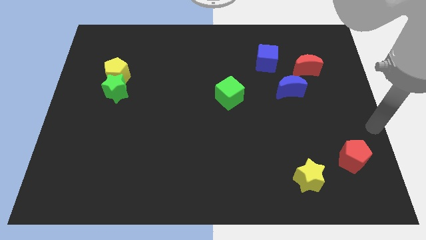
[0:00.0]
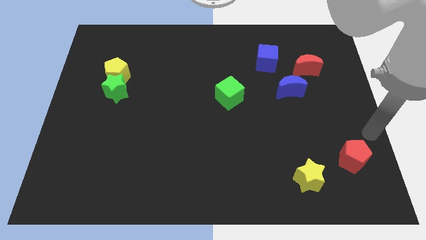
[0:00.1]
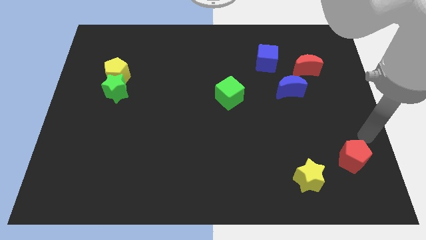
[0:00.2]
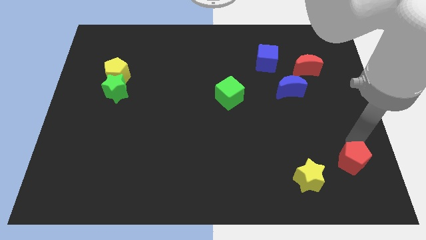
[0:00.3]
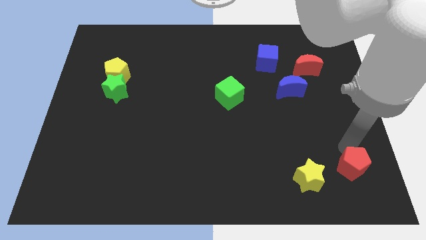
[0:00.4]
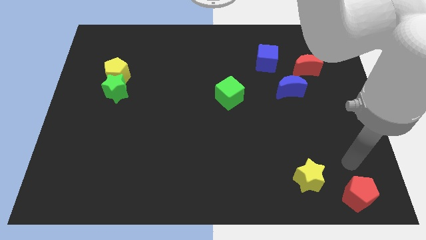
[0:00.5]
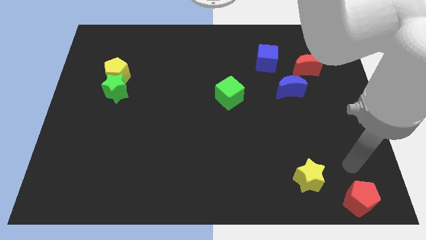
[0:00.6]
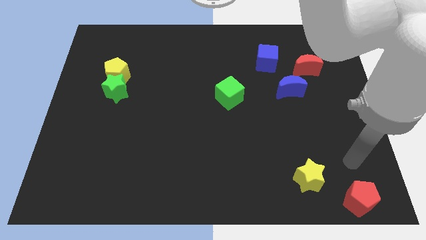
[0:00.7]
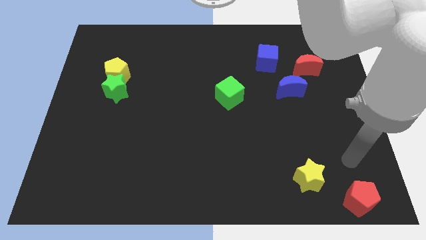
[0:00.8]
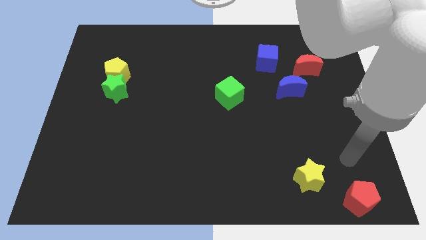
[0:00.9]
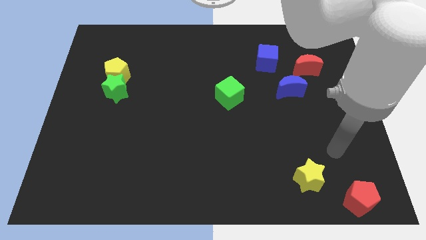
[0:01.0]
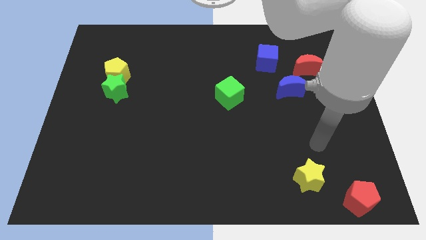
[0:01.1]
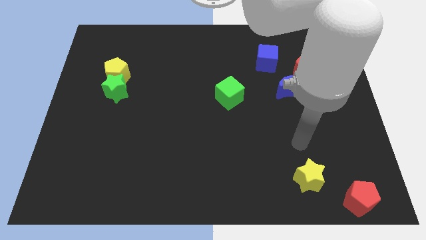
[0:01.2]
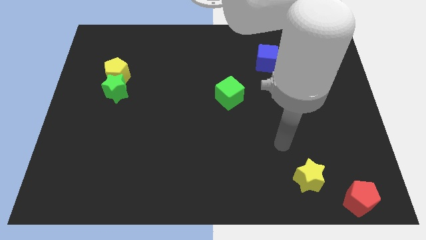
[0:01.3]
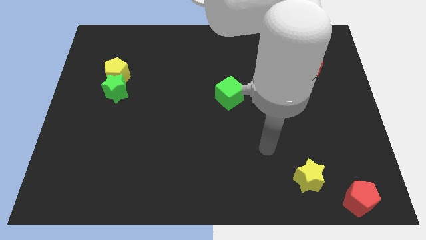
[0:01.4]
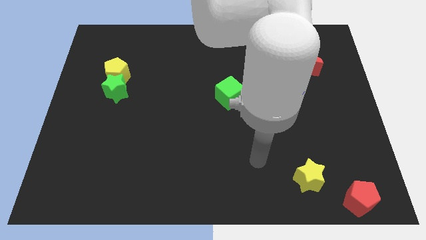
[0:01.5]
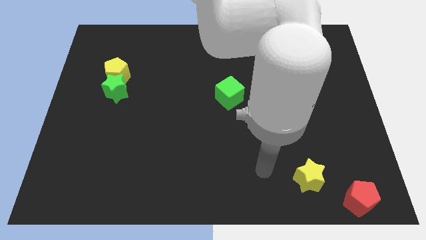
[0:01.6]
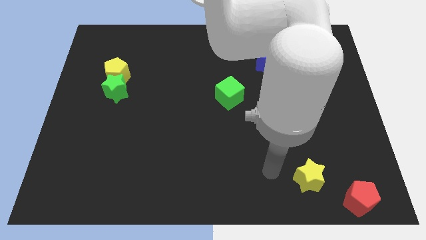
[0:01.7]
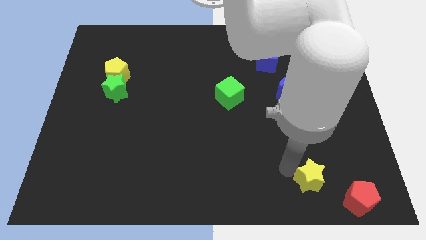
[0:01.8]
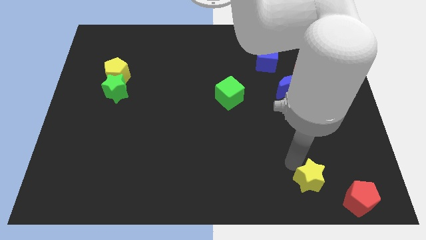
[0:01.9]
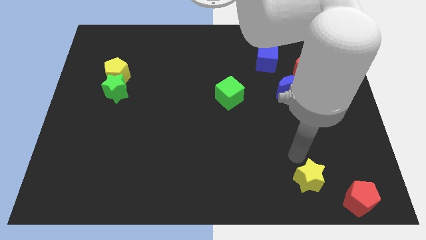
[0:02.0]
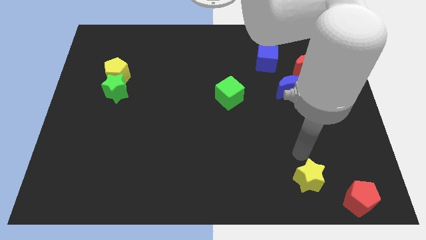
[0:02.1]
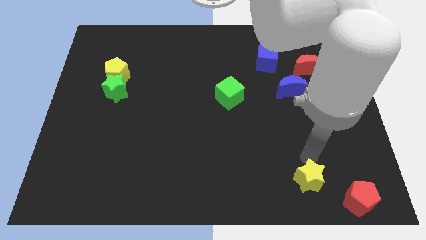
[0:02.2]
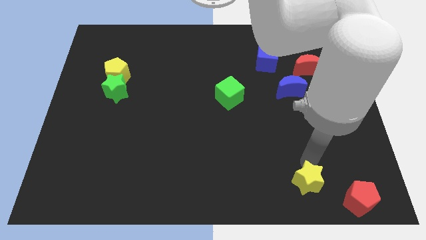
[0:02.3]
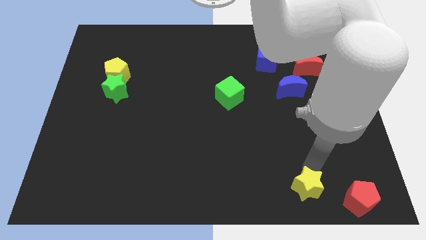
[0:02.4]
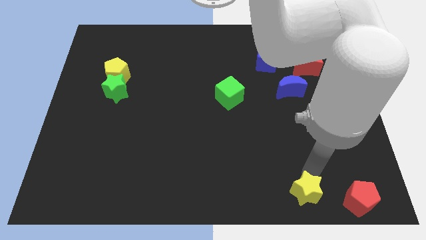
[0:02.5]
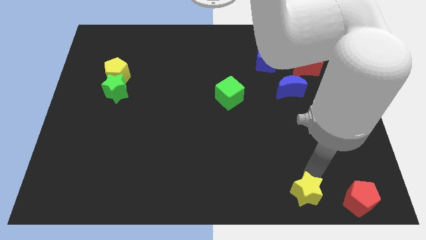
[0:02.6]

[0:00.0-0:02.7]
move the red pentagon to the bottom right

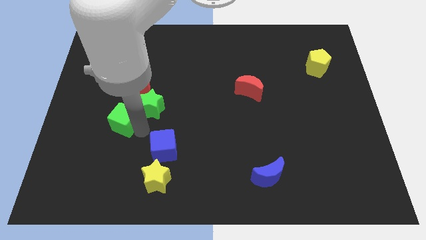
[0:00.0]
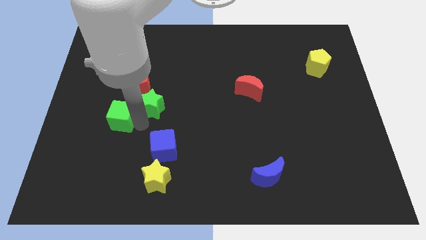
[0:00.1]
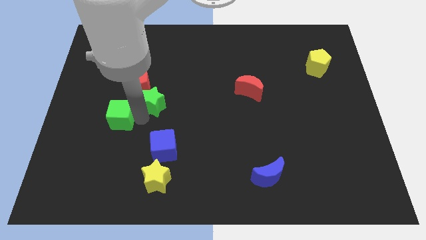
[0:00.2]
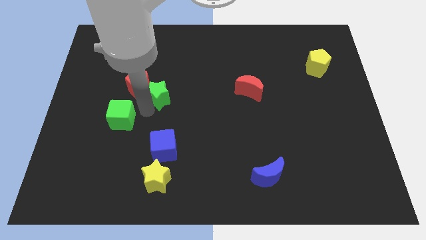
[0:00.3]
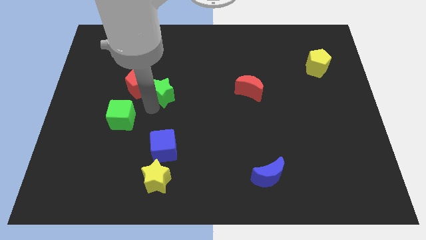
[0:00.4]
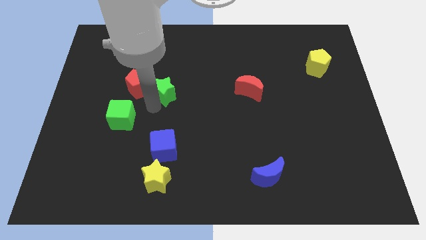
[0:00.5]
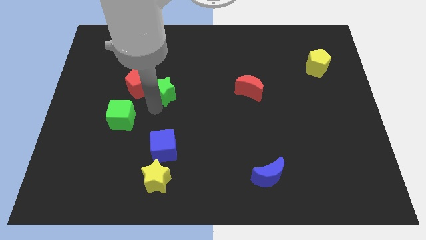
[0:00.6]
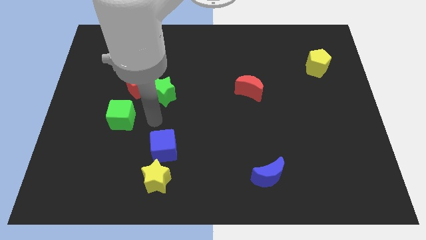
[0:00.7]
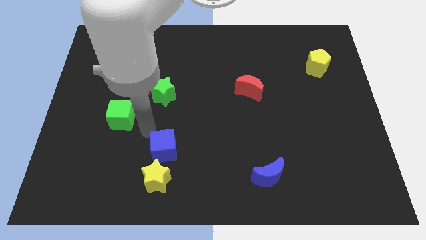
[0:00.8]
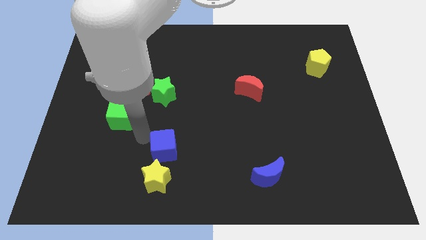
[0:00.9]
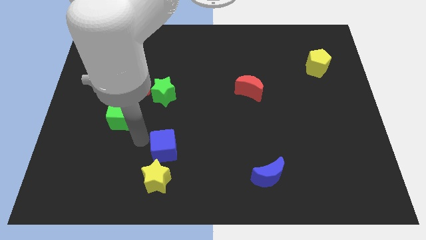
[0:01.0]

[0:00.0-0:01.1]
move the green star above the blue cube

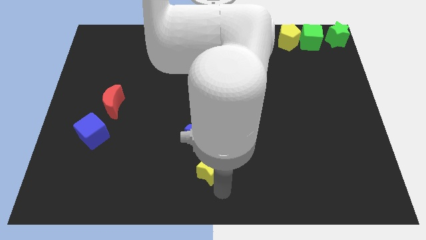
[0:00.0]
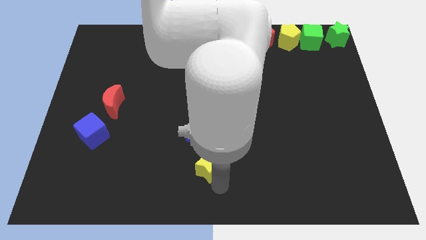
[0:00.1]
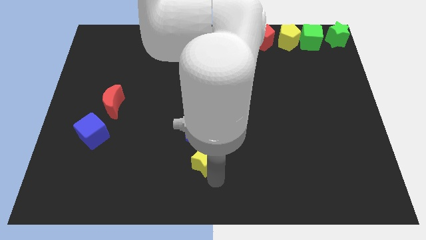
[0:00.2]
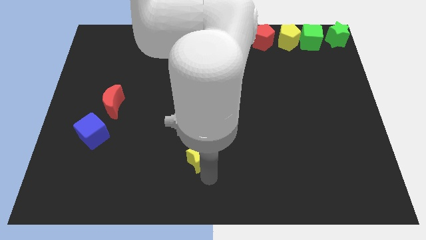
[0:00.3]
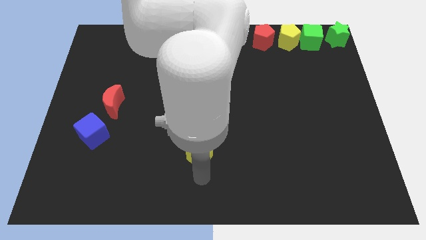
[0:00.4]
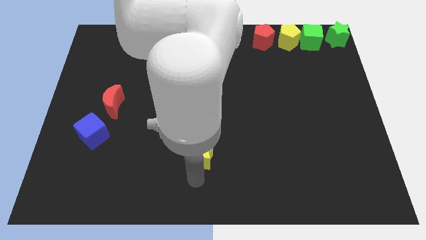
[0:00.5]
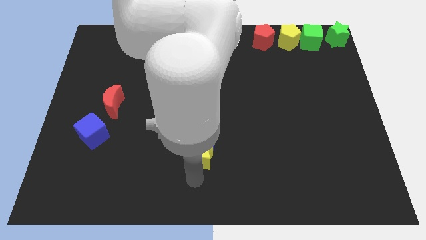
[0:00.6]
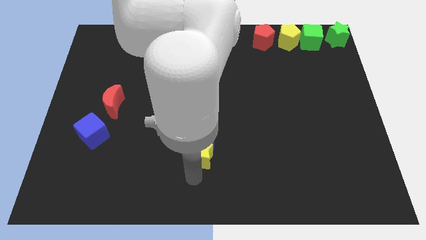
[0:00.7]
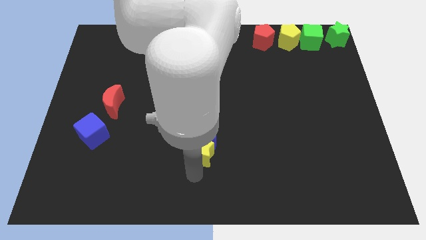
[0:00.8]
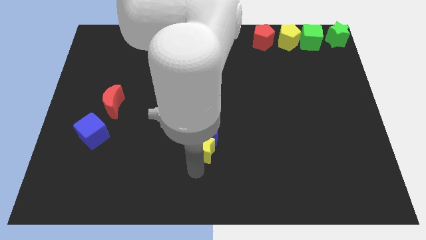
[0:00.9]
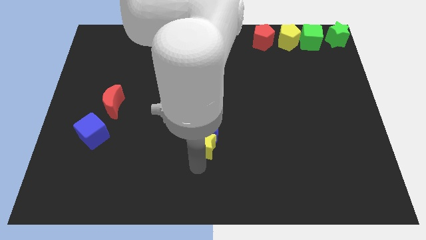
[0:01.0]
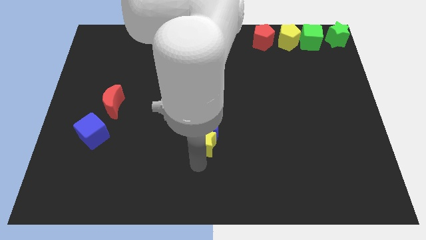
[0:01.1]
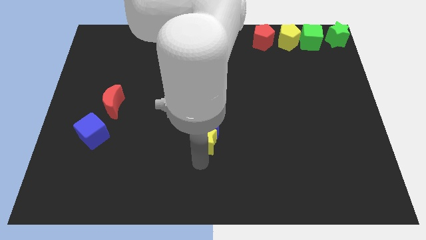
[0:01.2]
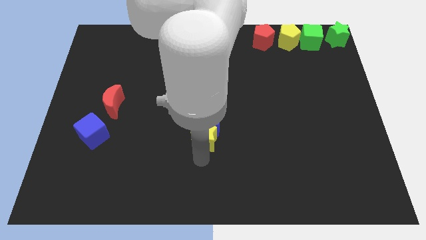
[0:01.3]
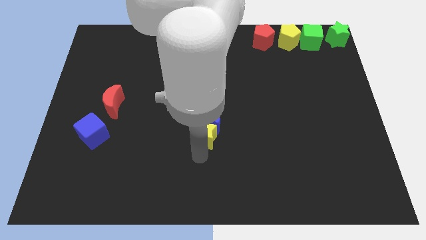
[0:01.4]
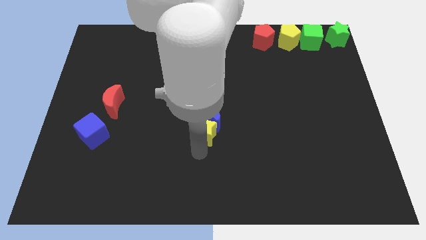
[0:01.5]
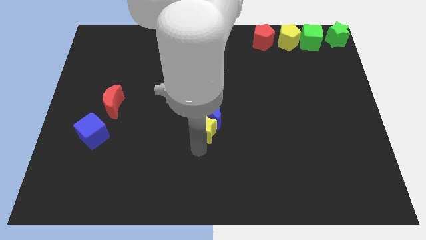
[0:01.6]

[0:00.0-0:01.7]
push the yellow star into blue crescent

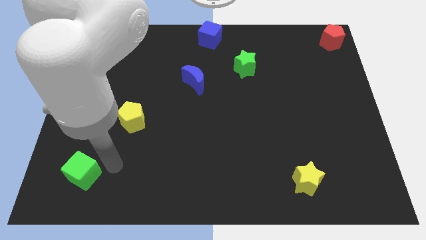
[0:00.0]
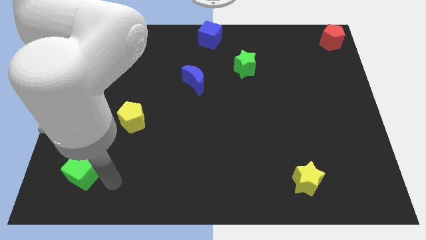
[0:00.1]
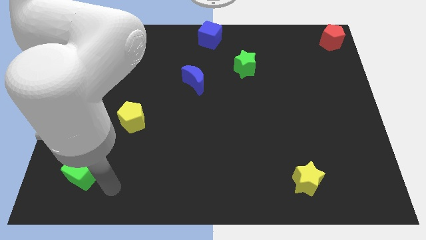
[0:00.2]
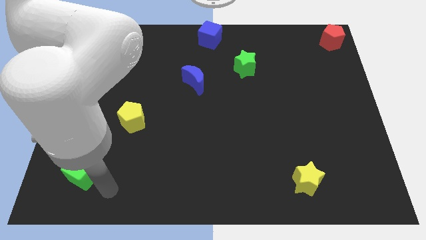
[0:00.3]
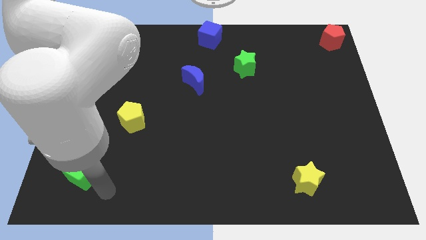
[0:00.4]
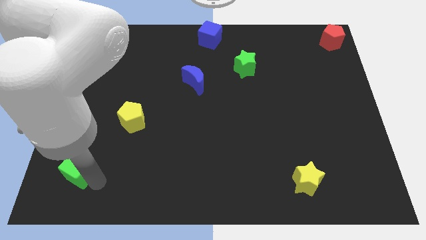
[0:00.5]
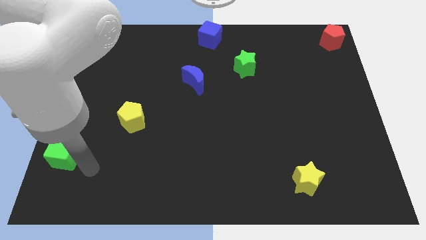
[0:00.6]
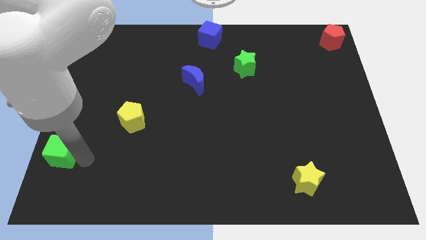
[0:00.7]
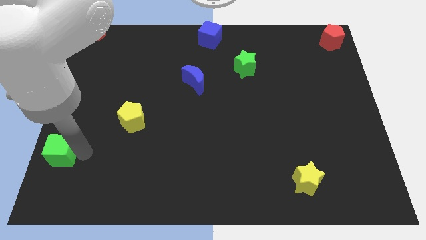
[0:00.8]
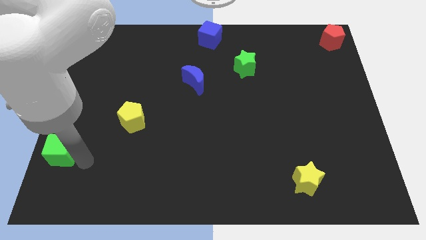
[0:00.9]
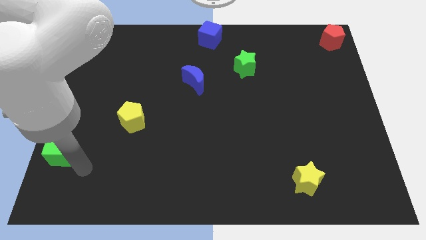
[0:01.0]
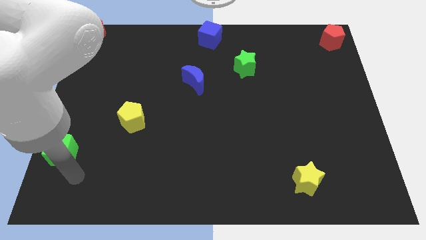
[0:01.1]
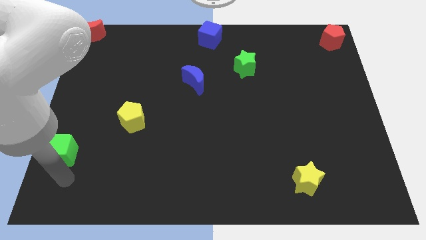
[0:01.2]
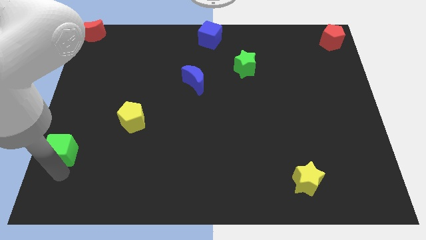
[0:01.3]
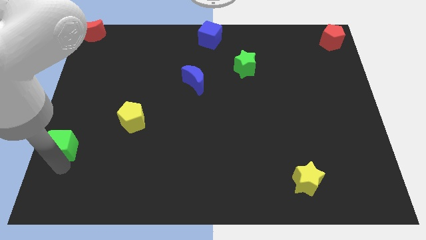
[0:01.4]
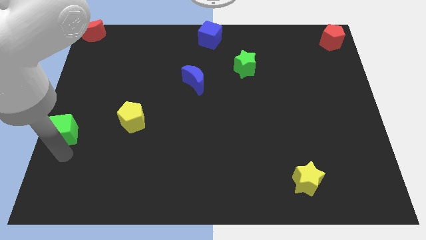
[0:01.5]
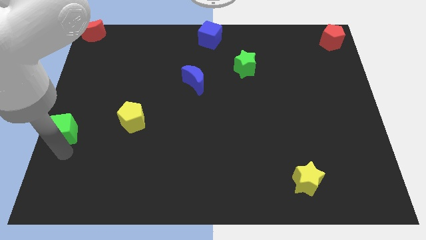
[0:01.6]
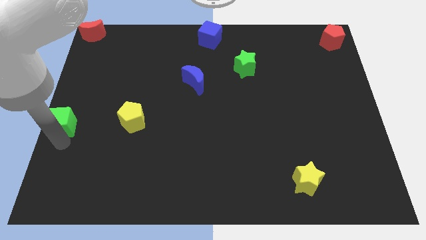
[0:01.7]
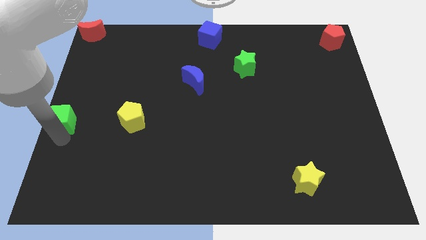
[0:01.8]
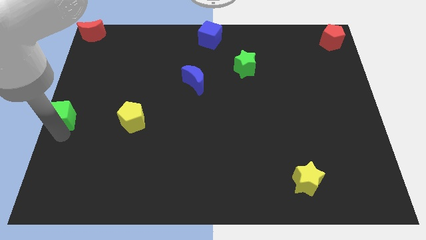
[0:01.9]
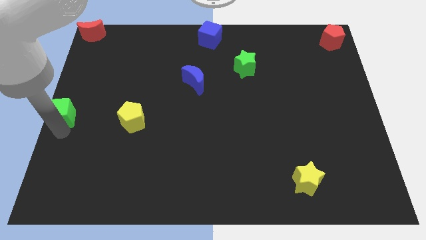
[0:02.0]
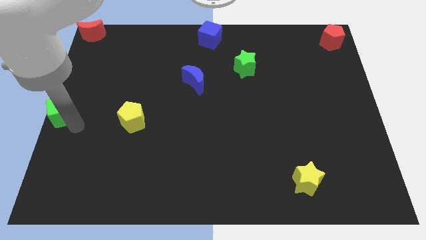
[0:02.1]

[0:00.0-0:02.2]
place green cube to the left of the board

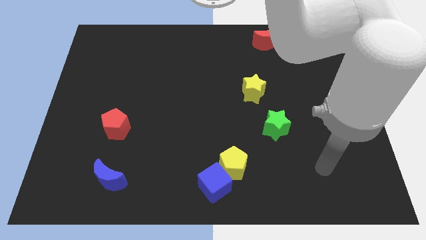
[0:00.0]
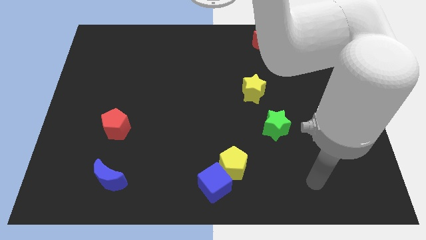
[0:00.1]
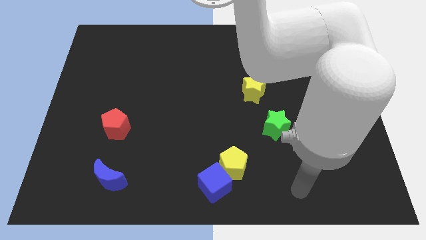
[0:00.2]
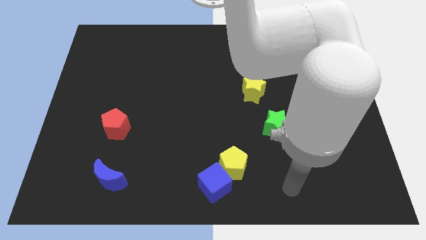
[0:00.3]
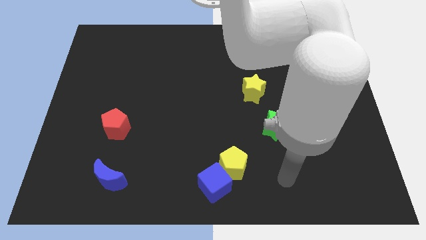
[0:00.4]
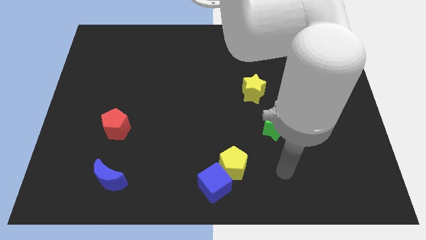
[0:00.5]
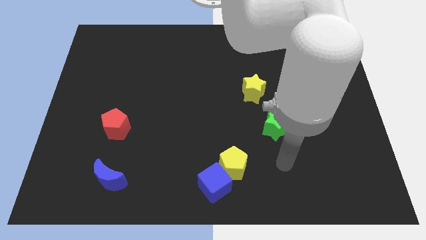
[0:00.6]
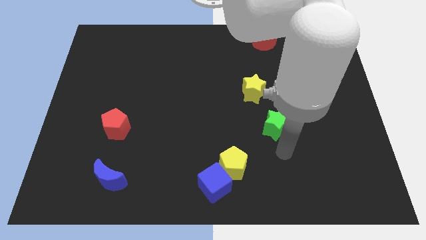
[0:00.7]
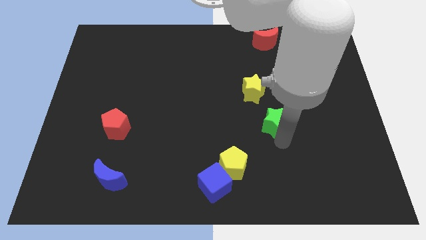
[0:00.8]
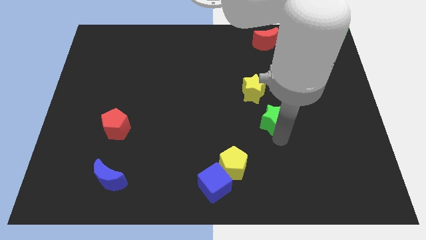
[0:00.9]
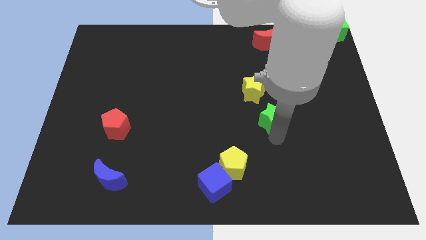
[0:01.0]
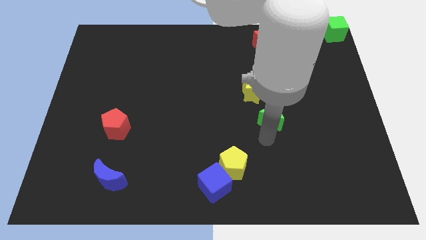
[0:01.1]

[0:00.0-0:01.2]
slightly touch the green star
